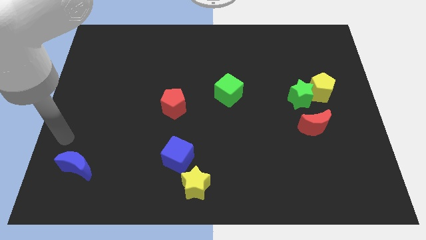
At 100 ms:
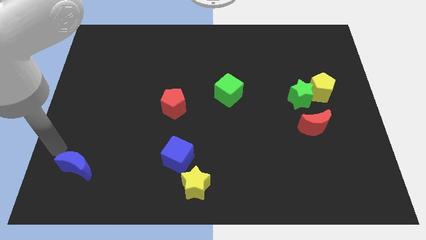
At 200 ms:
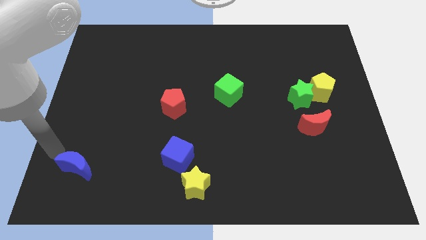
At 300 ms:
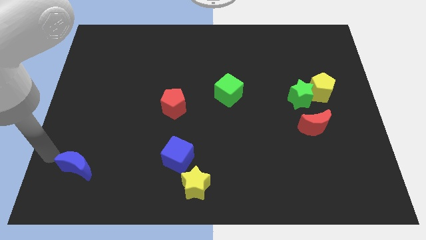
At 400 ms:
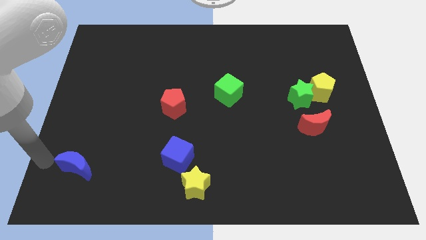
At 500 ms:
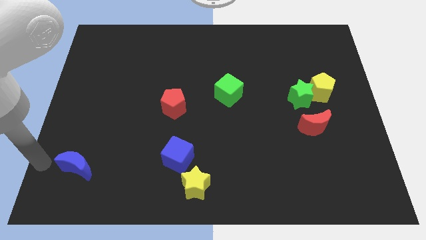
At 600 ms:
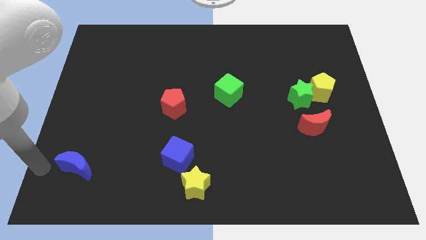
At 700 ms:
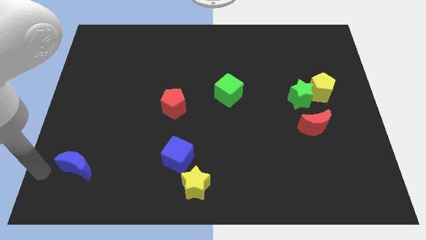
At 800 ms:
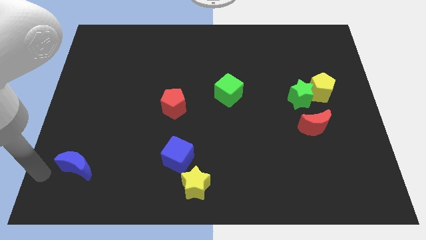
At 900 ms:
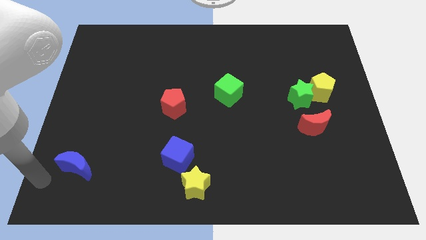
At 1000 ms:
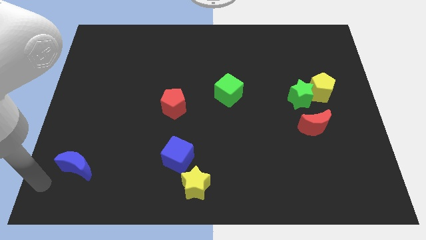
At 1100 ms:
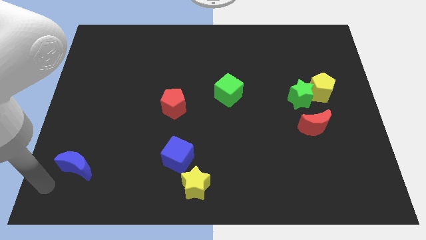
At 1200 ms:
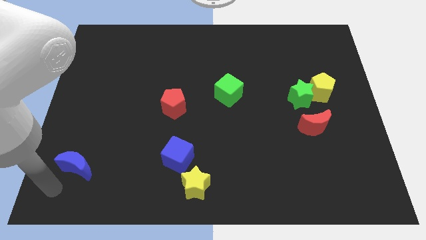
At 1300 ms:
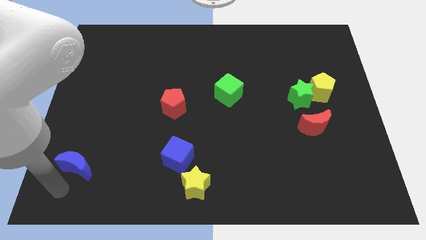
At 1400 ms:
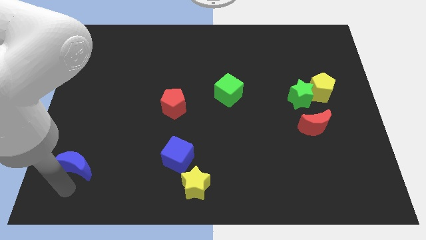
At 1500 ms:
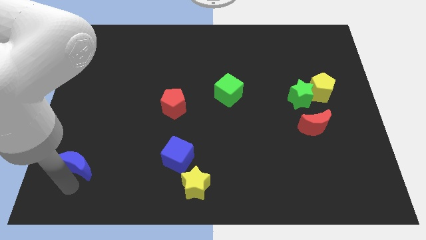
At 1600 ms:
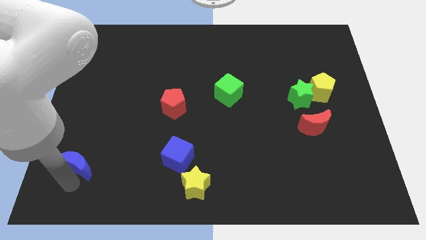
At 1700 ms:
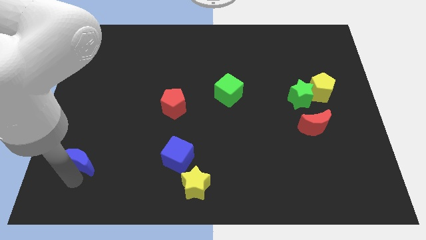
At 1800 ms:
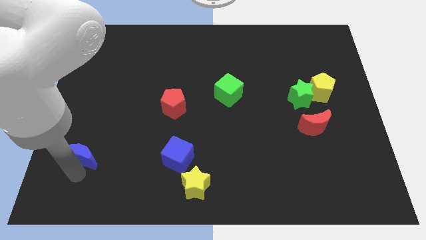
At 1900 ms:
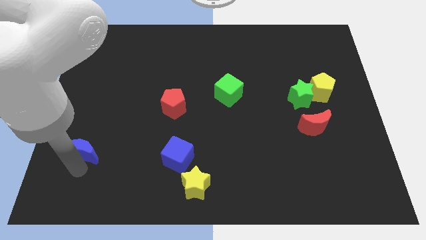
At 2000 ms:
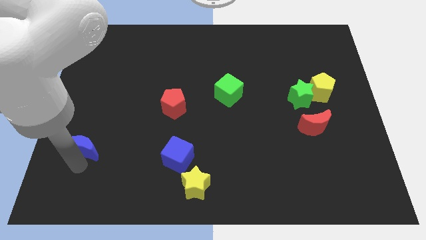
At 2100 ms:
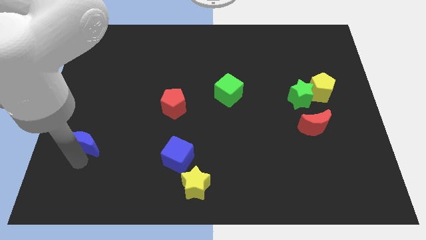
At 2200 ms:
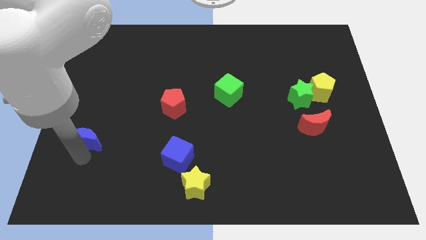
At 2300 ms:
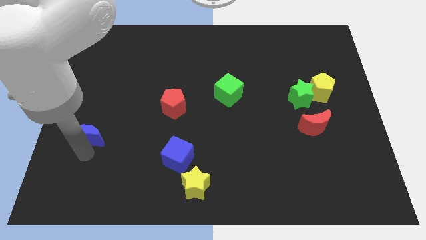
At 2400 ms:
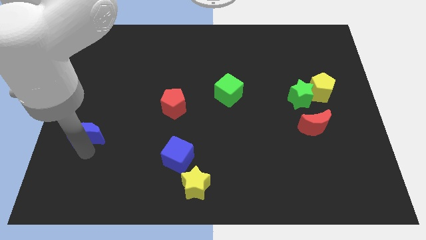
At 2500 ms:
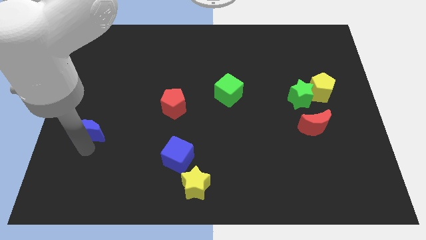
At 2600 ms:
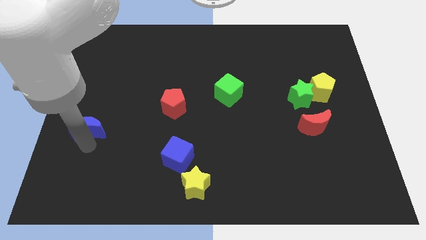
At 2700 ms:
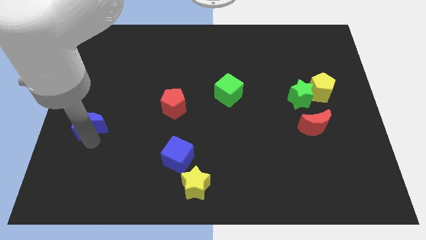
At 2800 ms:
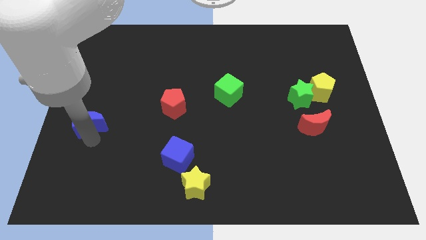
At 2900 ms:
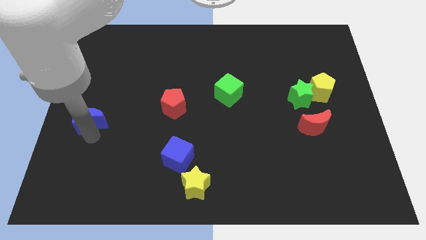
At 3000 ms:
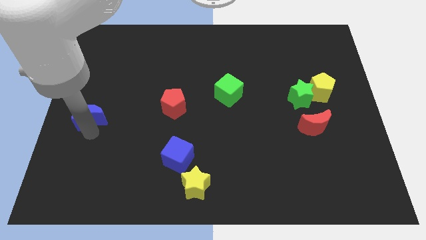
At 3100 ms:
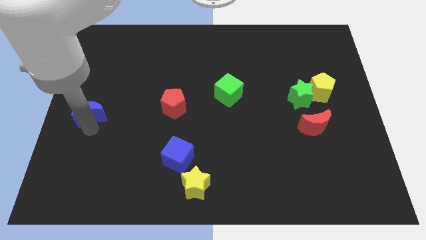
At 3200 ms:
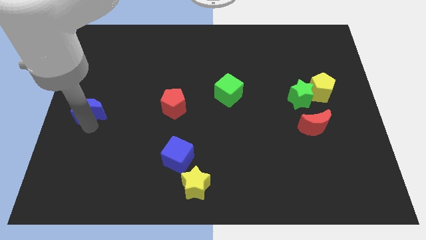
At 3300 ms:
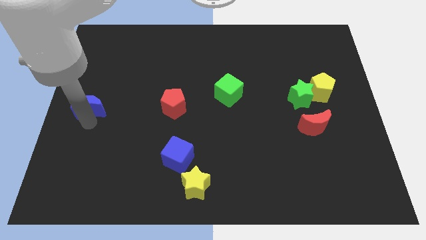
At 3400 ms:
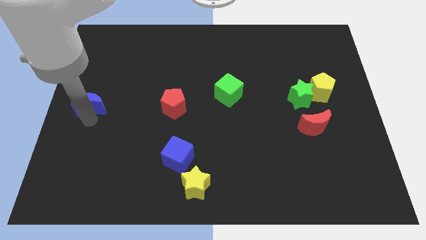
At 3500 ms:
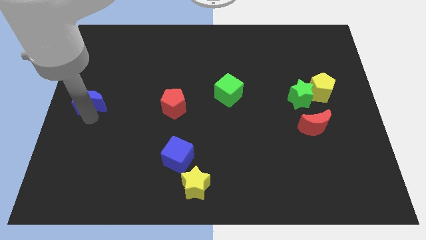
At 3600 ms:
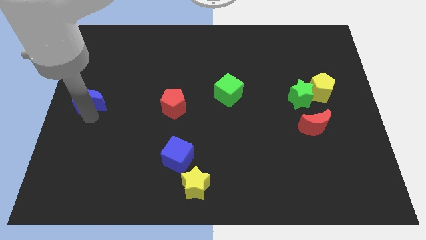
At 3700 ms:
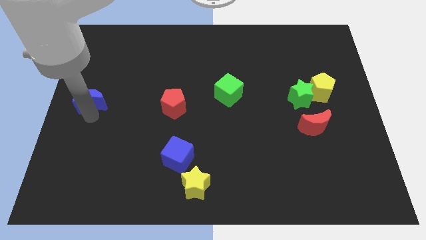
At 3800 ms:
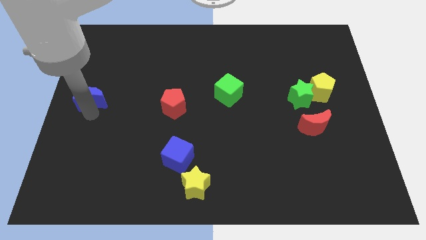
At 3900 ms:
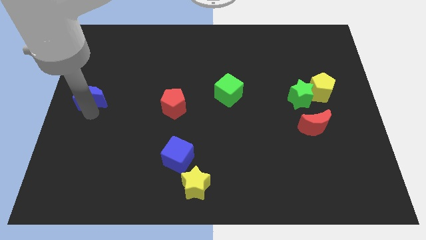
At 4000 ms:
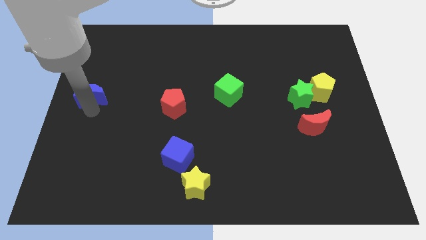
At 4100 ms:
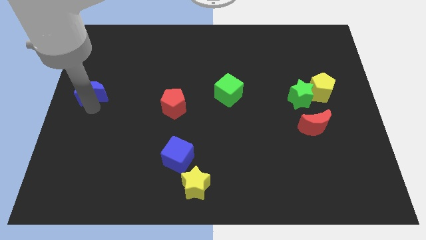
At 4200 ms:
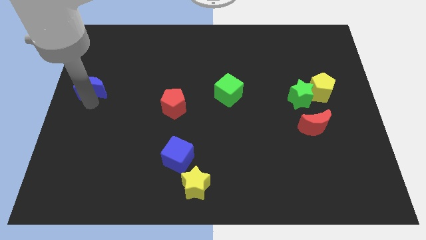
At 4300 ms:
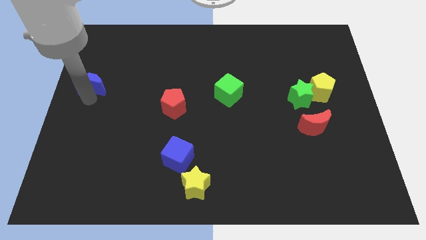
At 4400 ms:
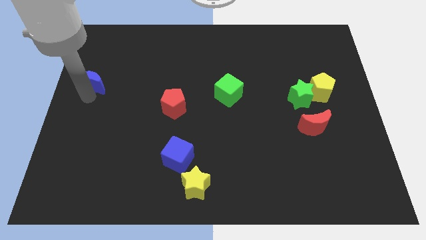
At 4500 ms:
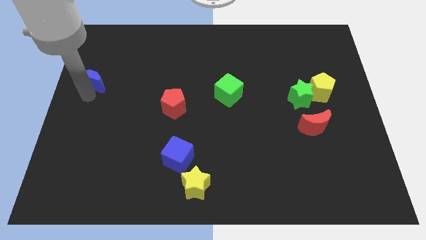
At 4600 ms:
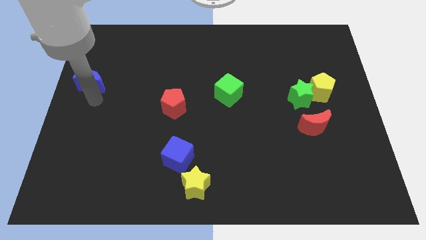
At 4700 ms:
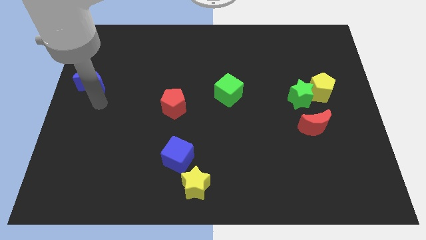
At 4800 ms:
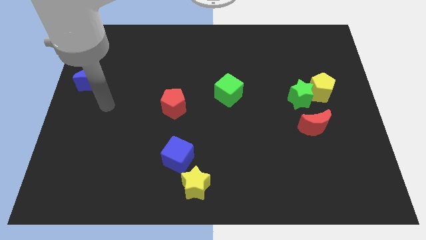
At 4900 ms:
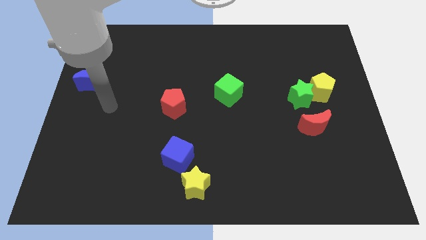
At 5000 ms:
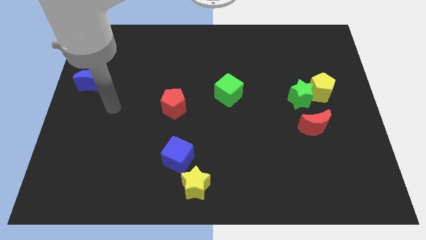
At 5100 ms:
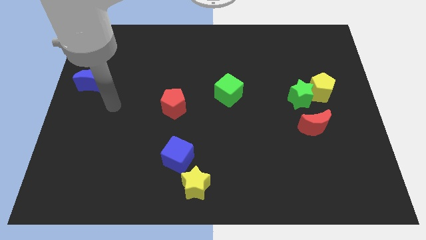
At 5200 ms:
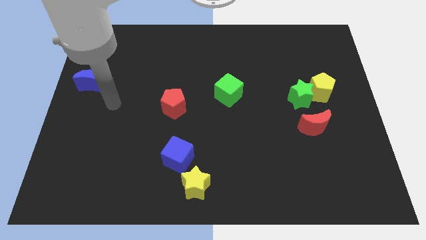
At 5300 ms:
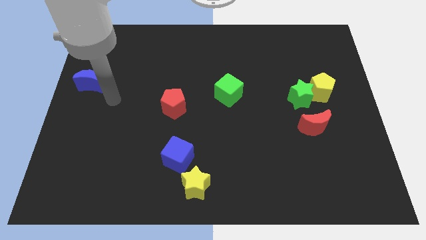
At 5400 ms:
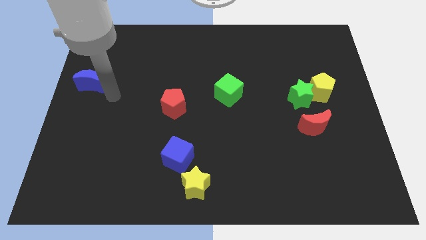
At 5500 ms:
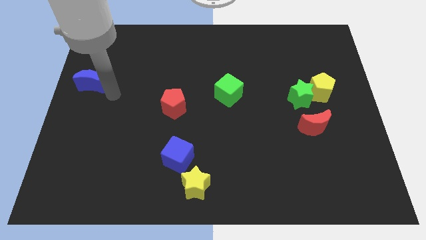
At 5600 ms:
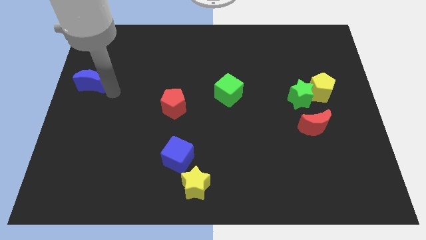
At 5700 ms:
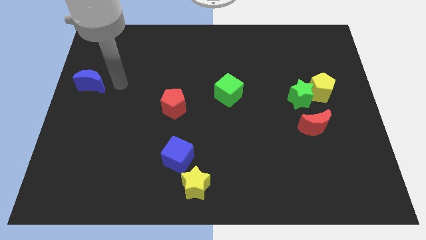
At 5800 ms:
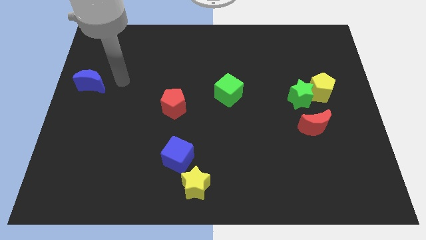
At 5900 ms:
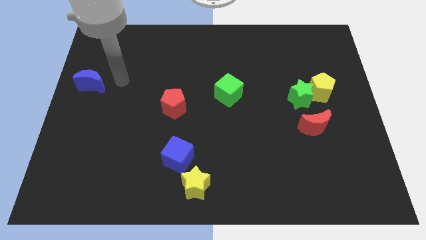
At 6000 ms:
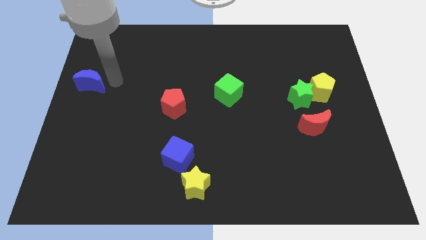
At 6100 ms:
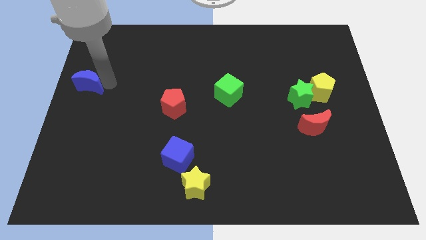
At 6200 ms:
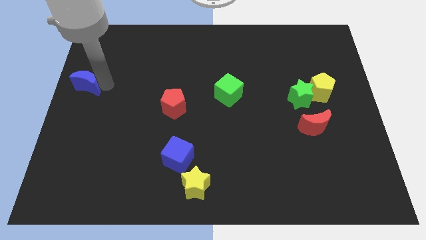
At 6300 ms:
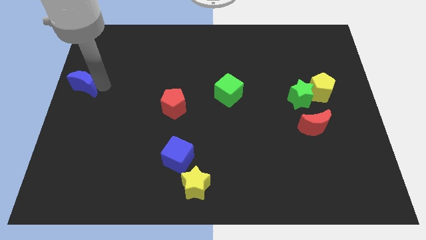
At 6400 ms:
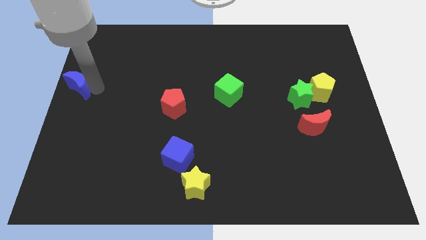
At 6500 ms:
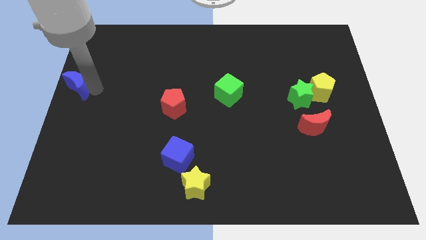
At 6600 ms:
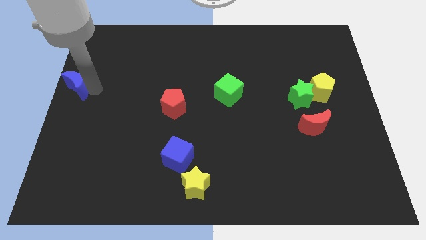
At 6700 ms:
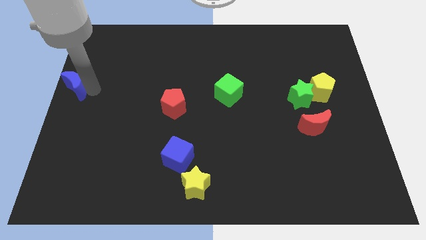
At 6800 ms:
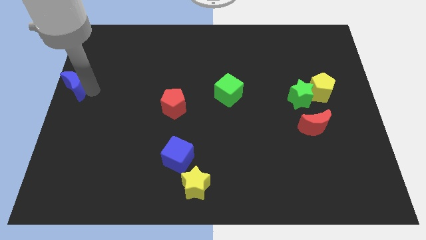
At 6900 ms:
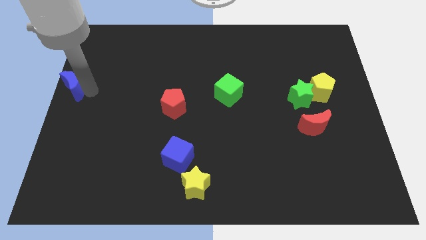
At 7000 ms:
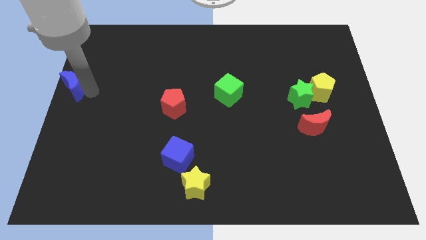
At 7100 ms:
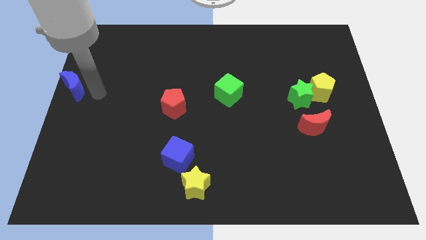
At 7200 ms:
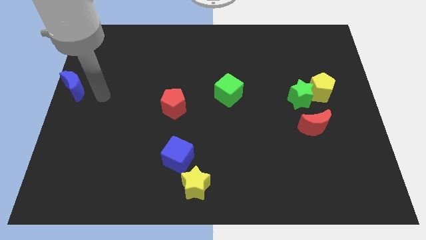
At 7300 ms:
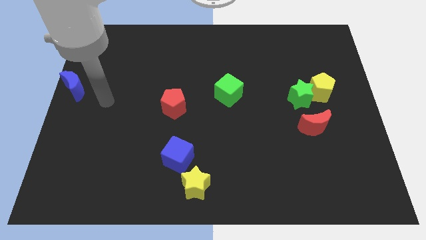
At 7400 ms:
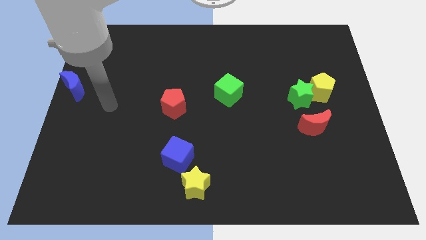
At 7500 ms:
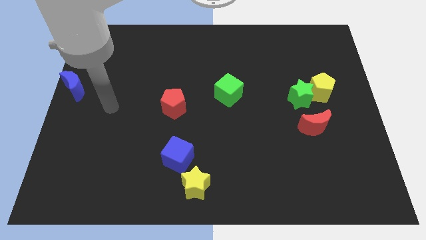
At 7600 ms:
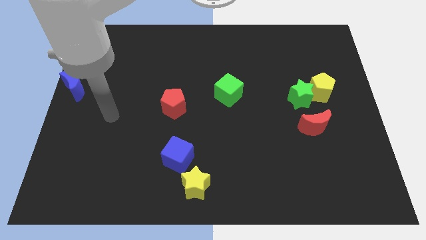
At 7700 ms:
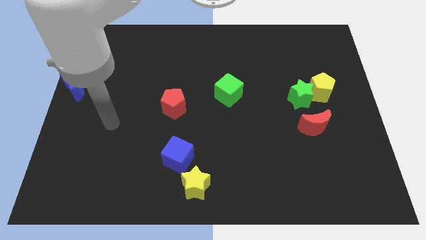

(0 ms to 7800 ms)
push the blue crescent vertically to the top

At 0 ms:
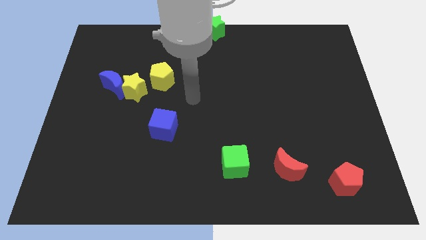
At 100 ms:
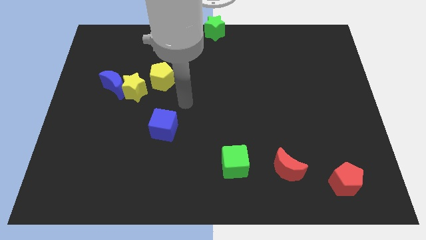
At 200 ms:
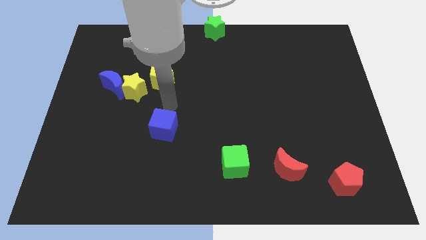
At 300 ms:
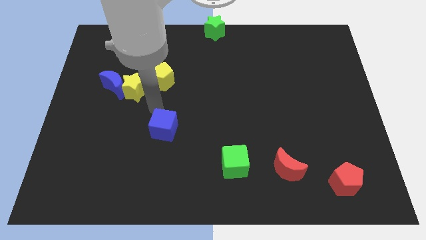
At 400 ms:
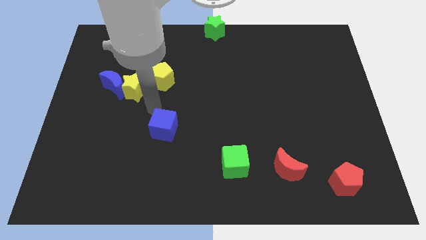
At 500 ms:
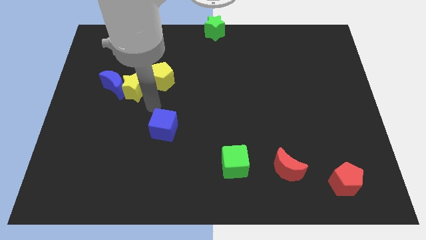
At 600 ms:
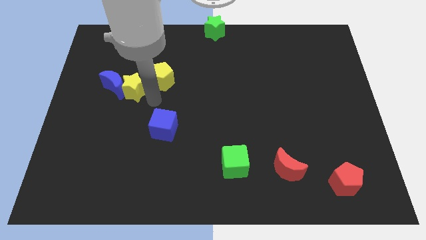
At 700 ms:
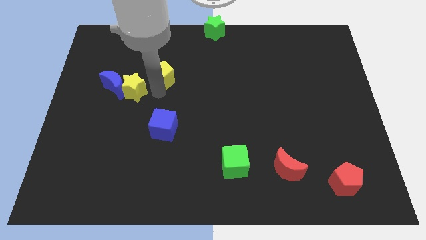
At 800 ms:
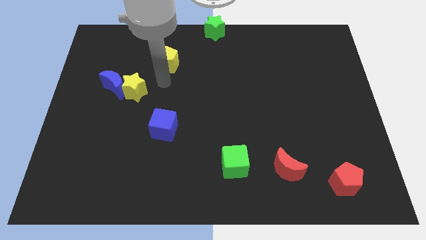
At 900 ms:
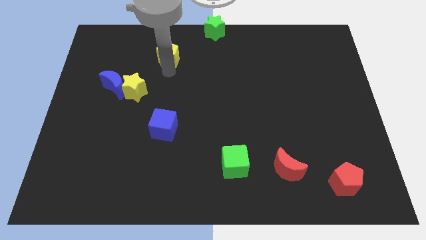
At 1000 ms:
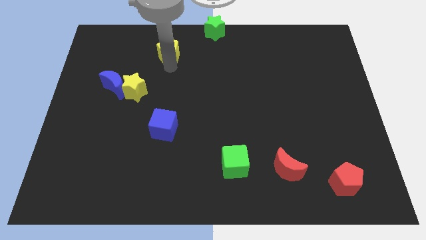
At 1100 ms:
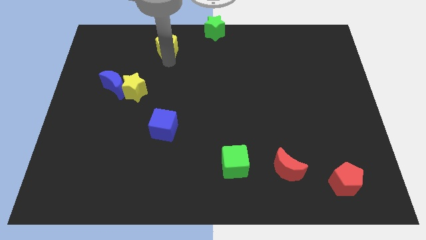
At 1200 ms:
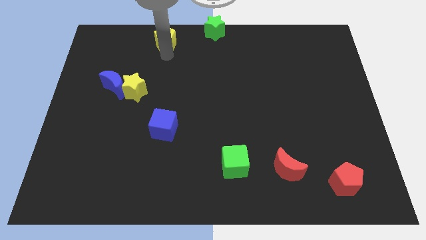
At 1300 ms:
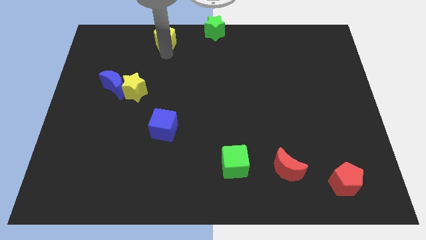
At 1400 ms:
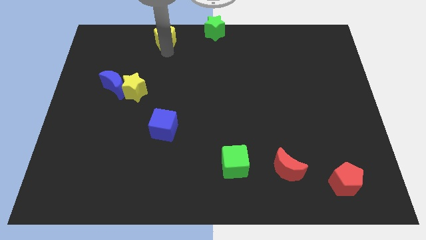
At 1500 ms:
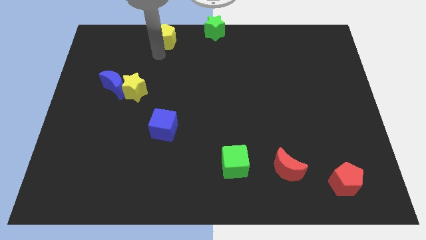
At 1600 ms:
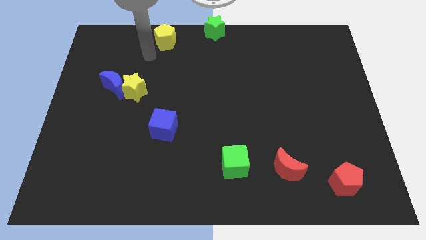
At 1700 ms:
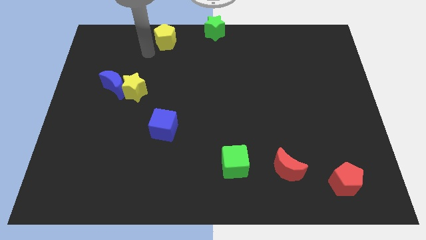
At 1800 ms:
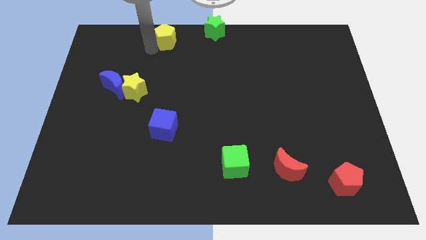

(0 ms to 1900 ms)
move the yellow pentagon away from the yellow star
